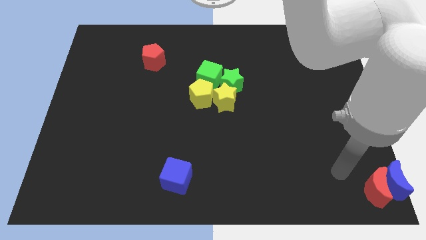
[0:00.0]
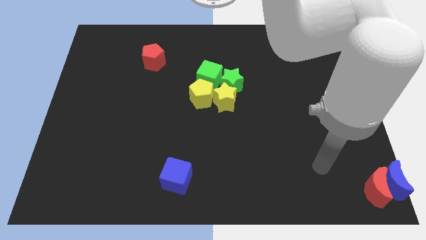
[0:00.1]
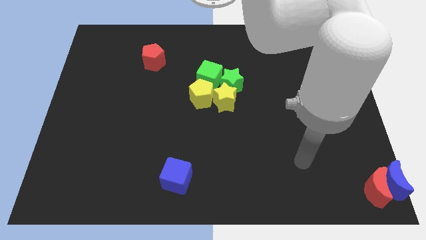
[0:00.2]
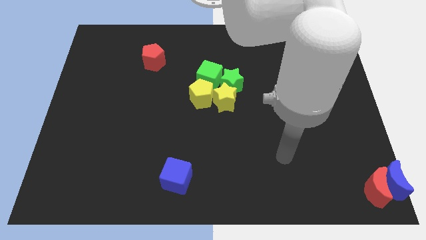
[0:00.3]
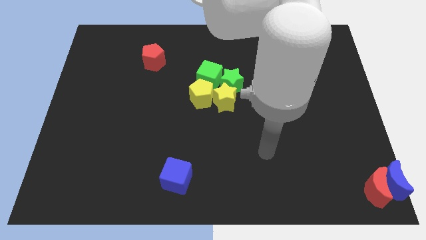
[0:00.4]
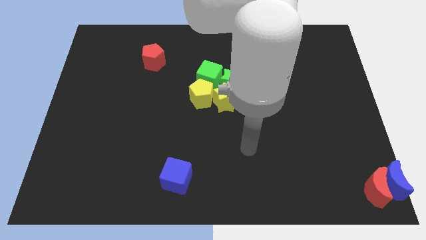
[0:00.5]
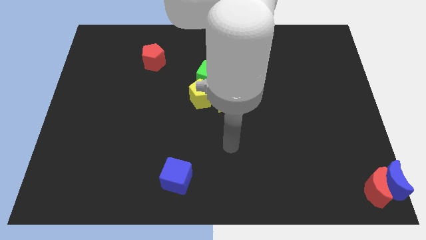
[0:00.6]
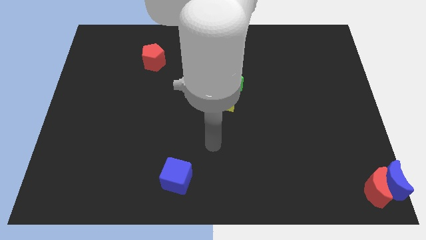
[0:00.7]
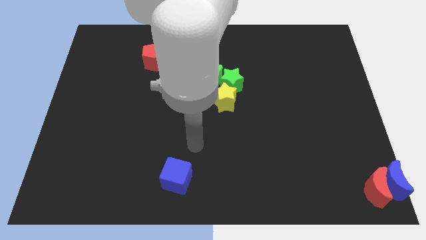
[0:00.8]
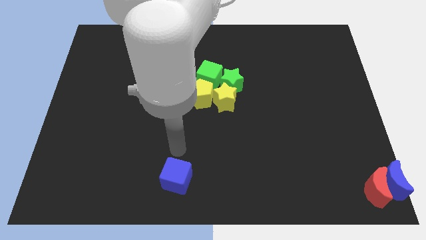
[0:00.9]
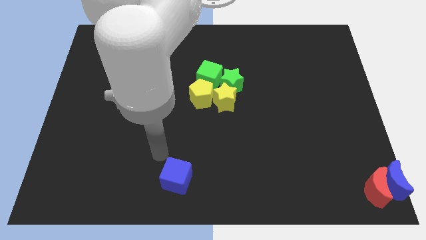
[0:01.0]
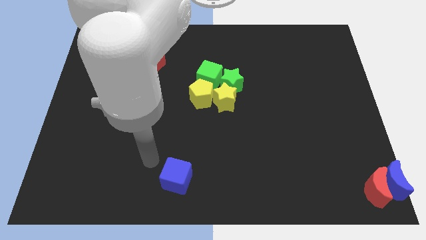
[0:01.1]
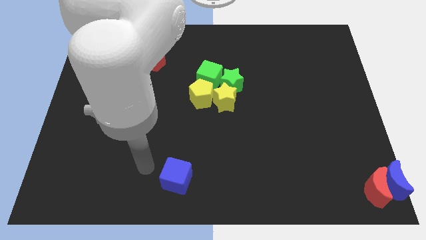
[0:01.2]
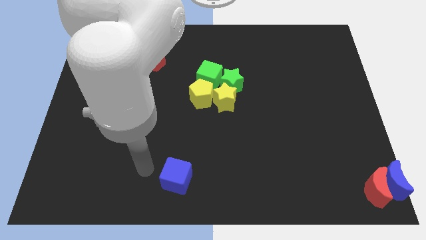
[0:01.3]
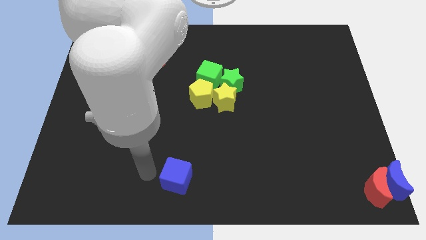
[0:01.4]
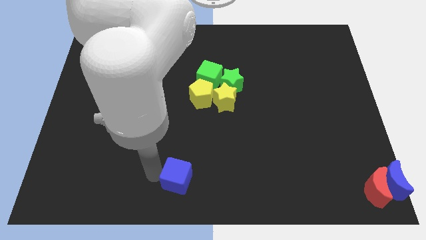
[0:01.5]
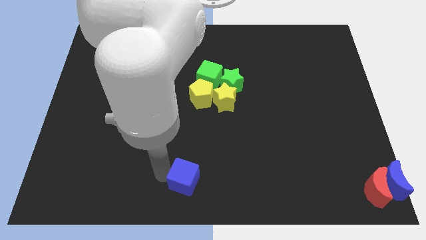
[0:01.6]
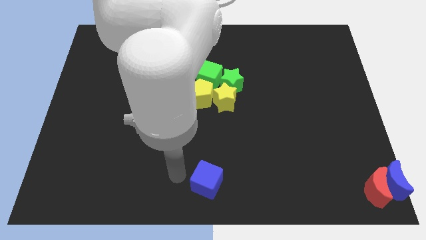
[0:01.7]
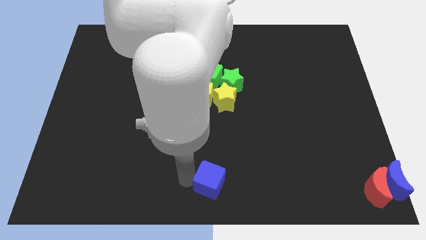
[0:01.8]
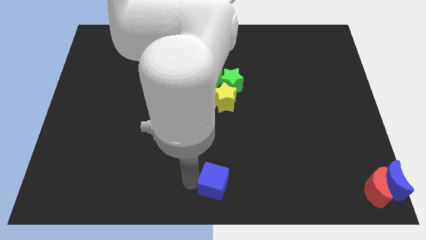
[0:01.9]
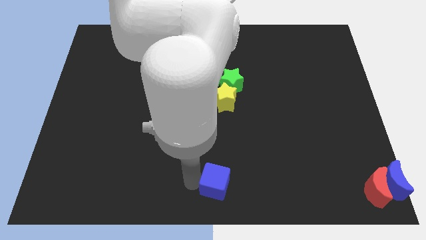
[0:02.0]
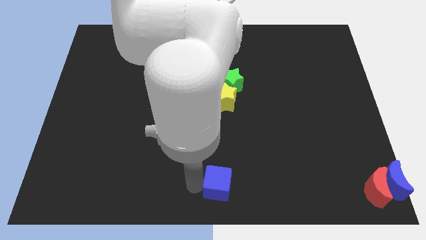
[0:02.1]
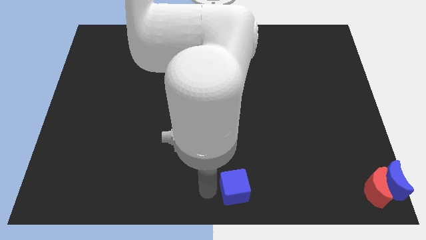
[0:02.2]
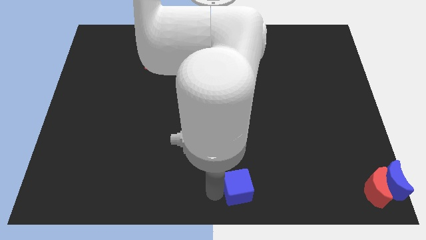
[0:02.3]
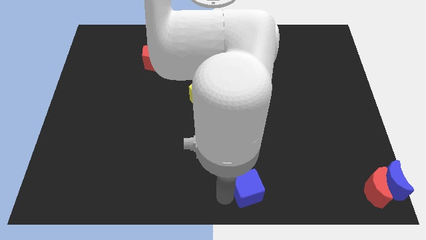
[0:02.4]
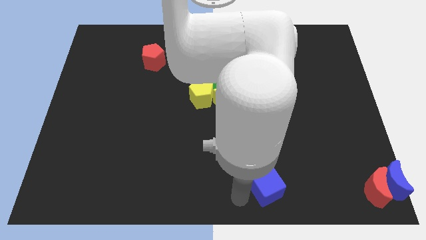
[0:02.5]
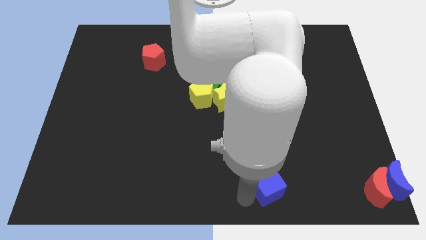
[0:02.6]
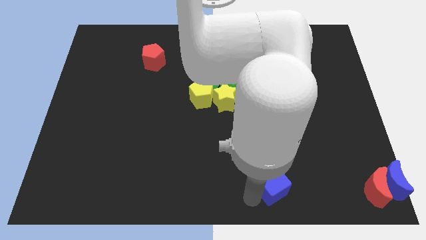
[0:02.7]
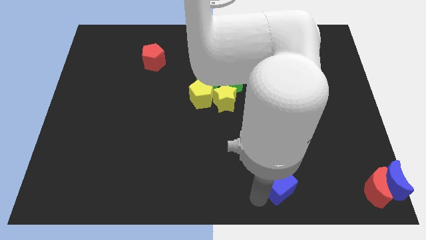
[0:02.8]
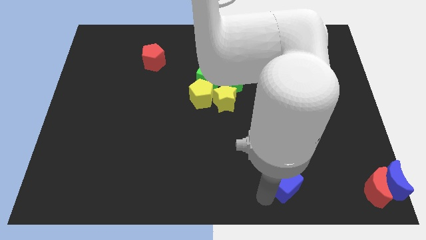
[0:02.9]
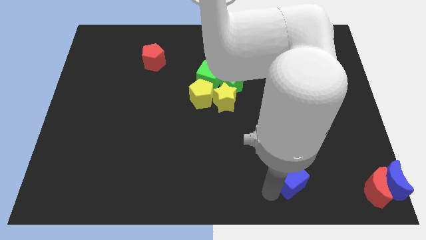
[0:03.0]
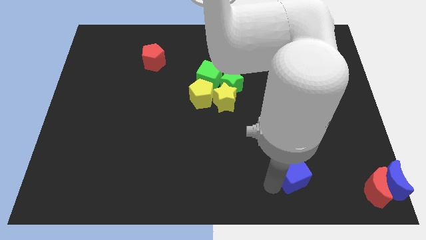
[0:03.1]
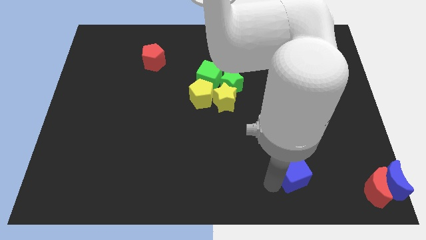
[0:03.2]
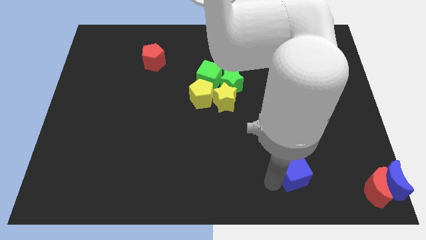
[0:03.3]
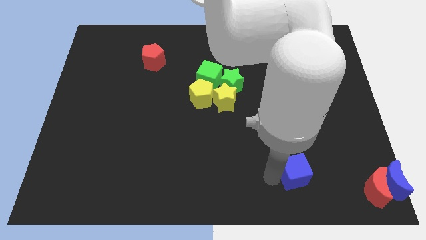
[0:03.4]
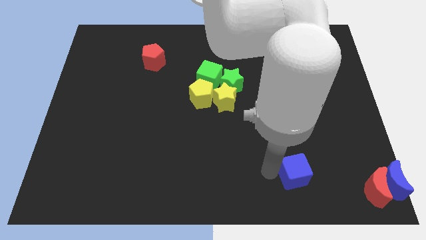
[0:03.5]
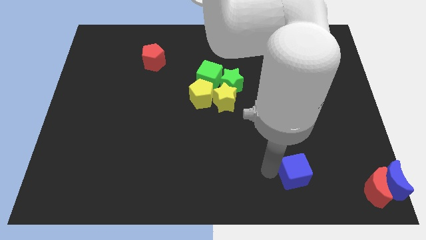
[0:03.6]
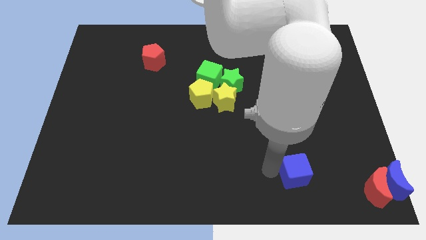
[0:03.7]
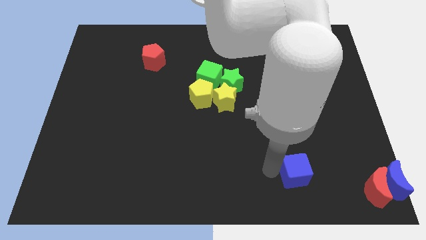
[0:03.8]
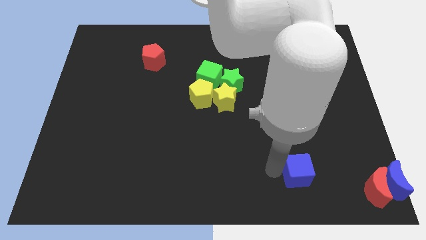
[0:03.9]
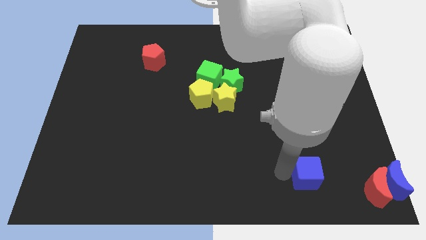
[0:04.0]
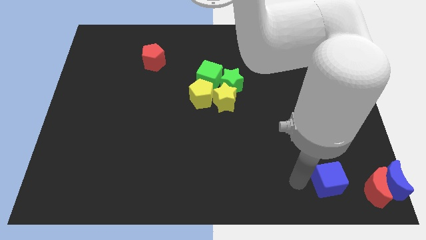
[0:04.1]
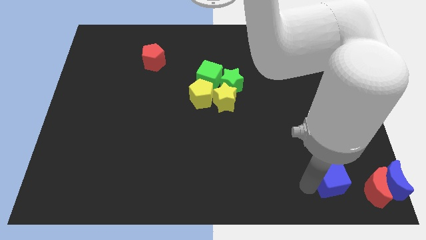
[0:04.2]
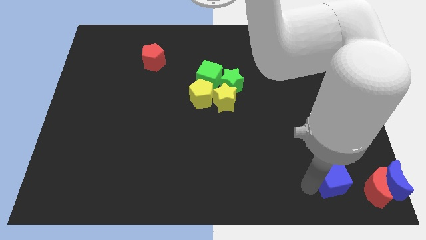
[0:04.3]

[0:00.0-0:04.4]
drag the blue cube towards the left side of the red moon

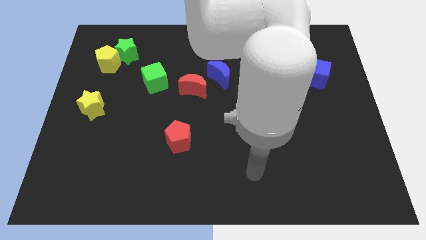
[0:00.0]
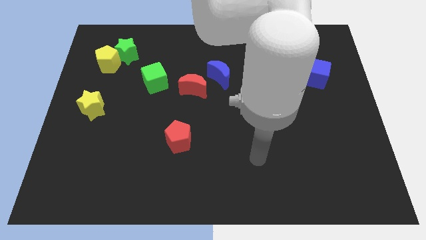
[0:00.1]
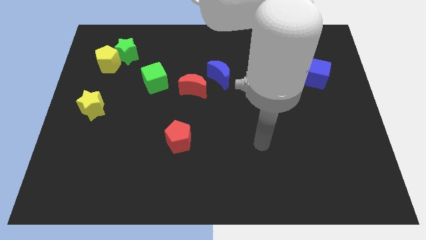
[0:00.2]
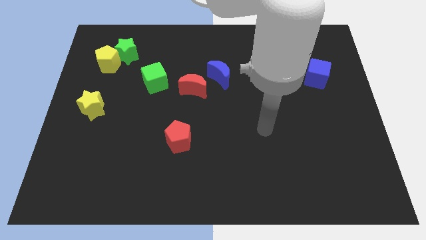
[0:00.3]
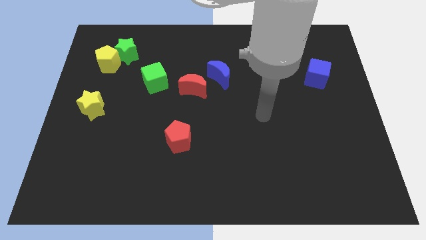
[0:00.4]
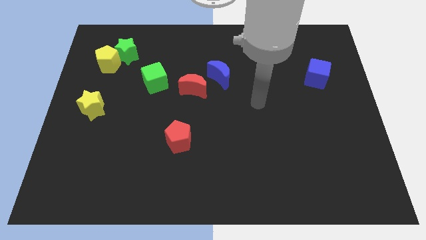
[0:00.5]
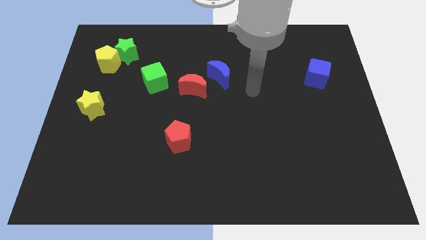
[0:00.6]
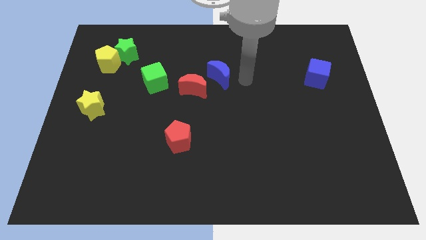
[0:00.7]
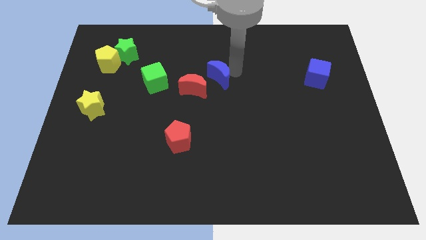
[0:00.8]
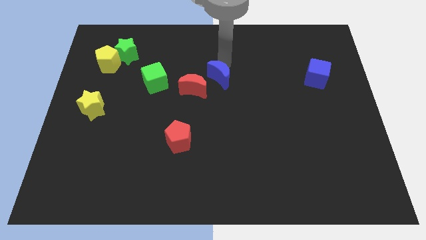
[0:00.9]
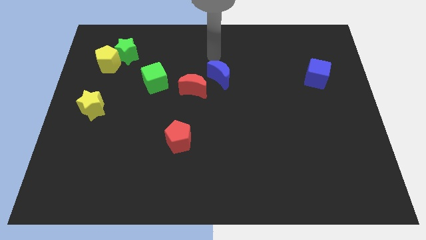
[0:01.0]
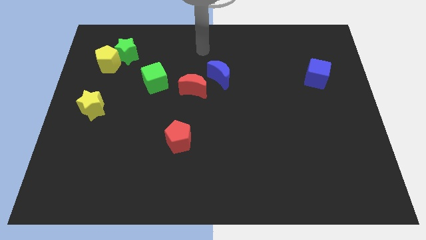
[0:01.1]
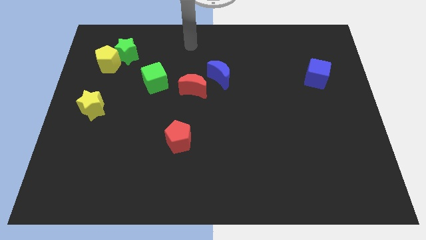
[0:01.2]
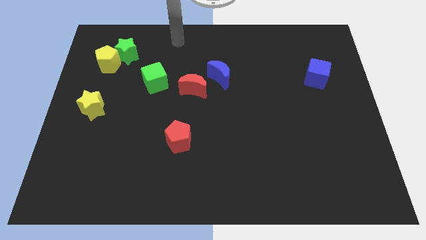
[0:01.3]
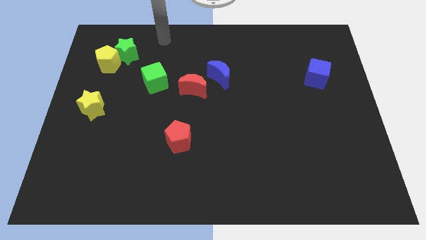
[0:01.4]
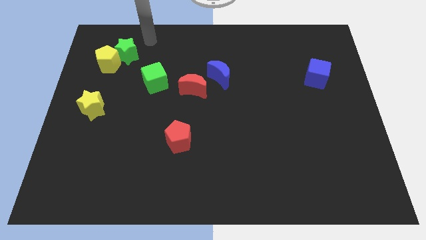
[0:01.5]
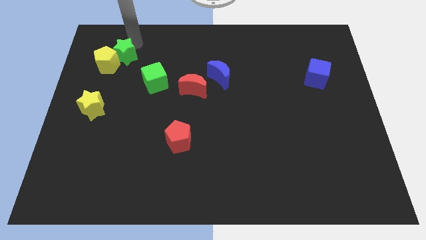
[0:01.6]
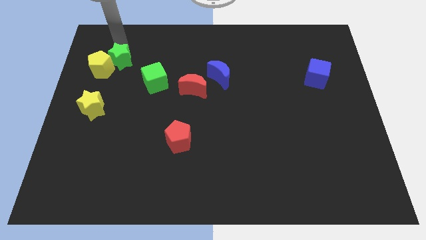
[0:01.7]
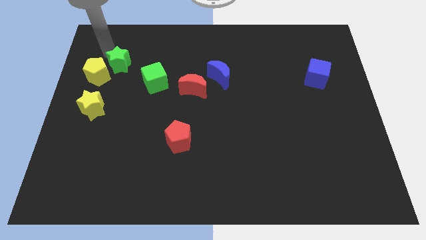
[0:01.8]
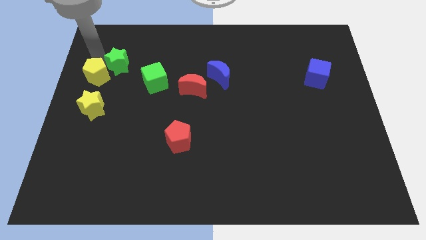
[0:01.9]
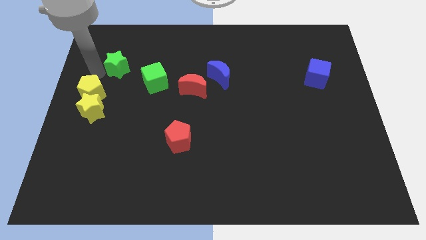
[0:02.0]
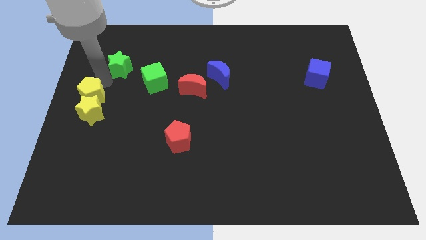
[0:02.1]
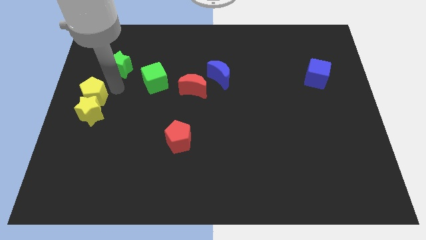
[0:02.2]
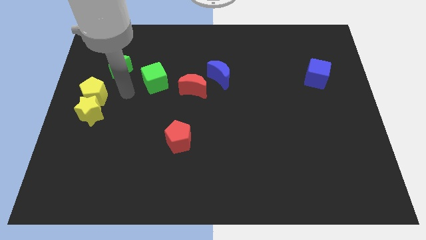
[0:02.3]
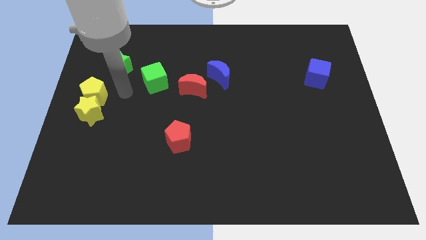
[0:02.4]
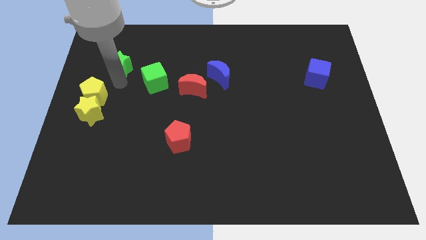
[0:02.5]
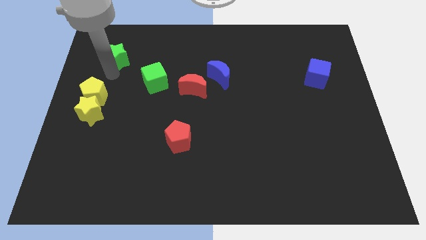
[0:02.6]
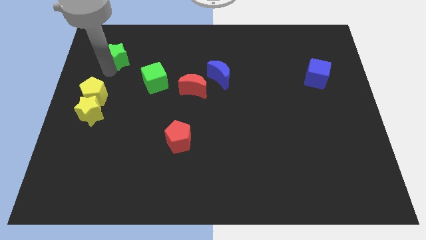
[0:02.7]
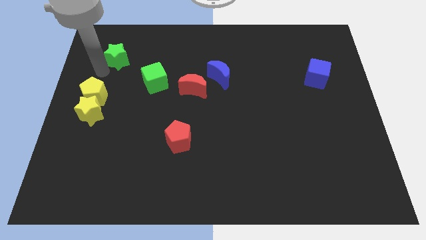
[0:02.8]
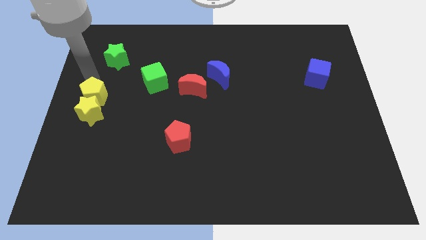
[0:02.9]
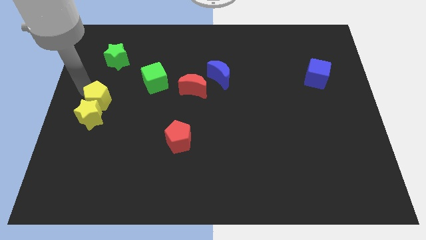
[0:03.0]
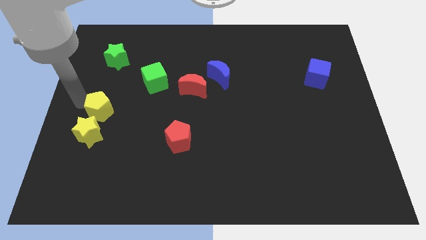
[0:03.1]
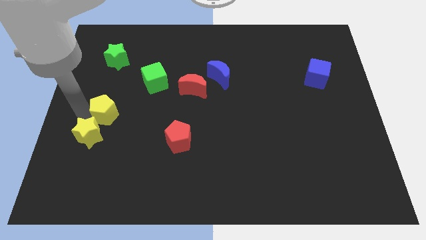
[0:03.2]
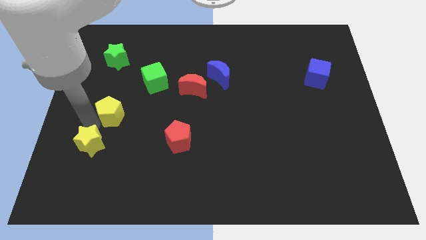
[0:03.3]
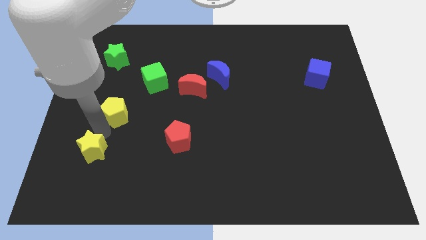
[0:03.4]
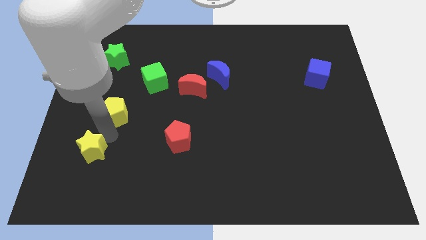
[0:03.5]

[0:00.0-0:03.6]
push the yellow blocks

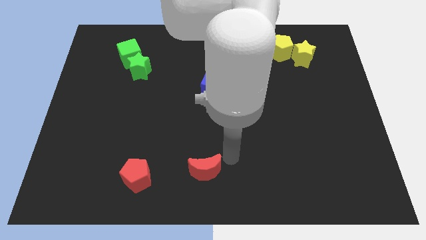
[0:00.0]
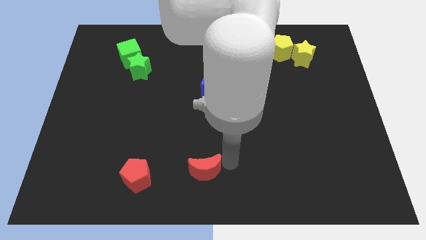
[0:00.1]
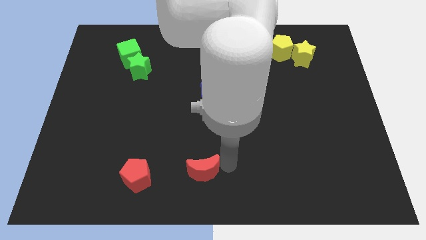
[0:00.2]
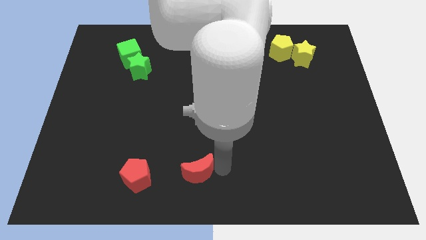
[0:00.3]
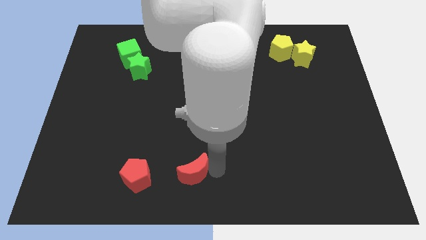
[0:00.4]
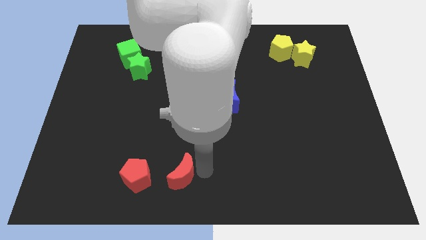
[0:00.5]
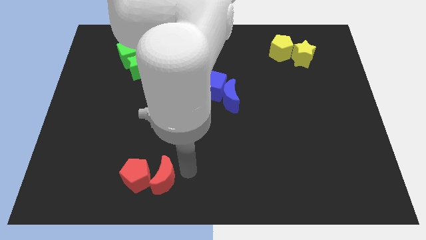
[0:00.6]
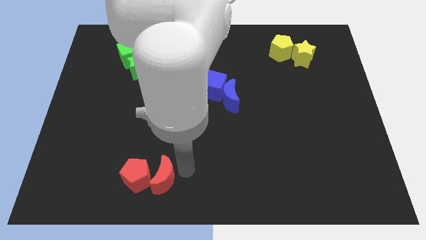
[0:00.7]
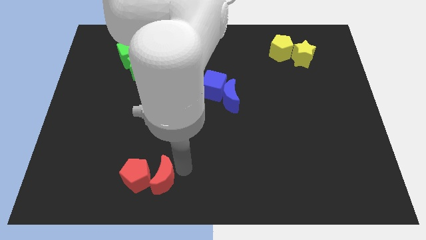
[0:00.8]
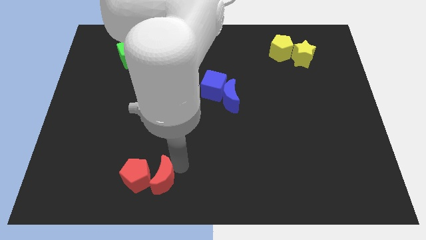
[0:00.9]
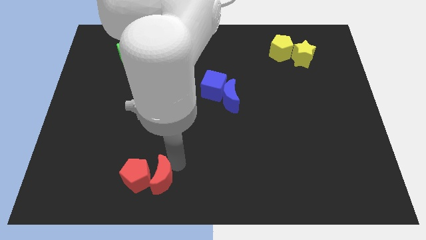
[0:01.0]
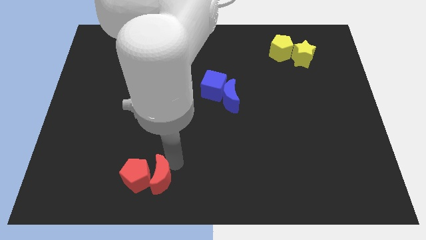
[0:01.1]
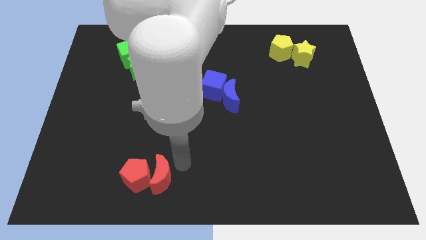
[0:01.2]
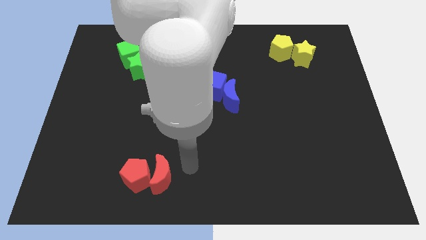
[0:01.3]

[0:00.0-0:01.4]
move the red moon beside the red pentagon
